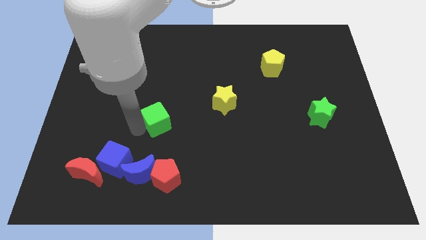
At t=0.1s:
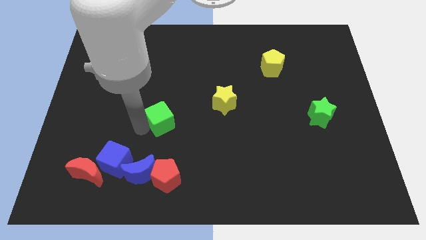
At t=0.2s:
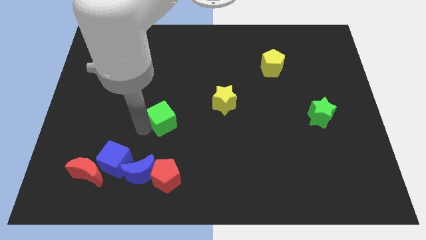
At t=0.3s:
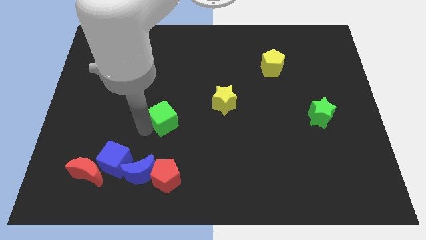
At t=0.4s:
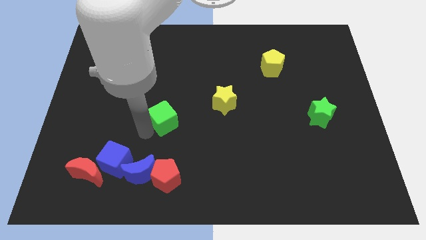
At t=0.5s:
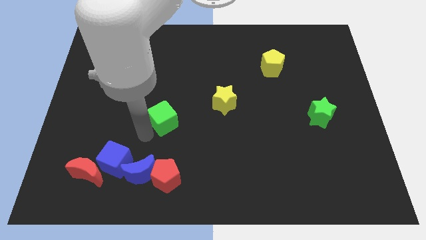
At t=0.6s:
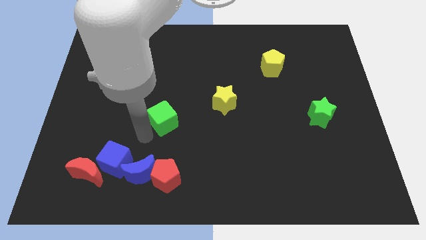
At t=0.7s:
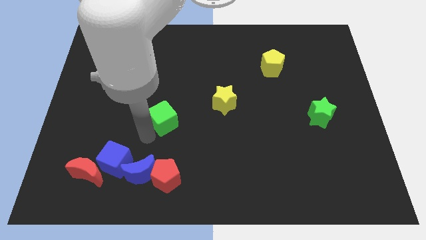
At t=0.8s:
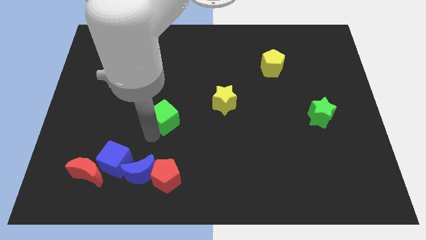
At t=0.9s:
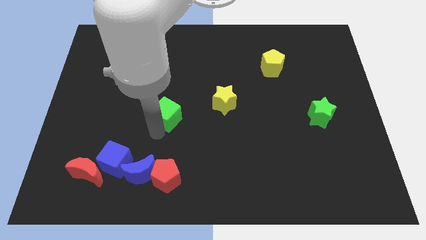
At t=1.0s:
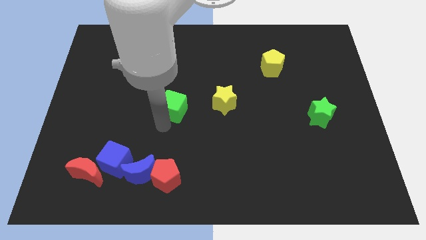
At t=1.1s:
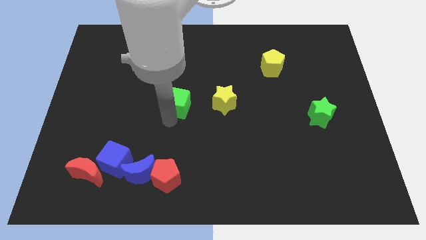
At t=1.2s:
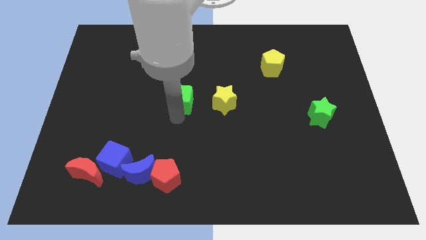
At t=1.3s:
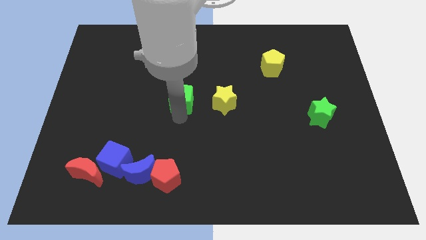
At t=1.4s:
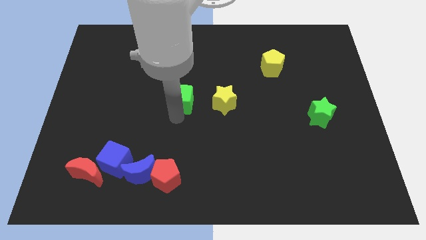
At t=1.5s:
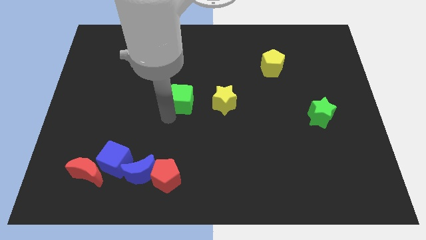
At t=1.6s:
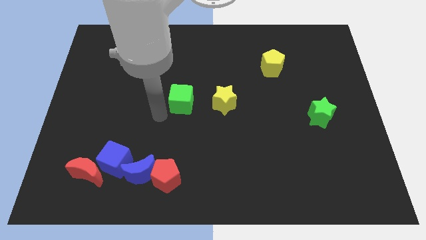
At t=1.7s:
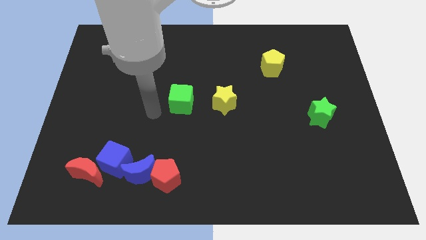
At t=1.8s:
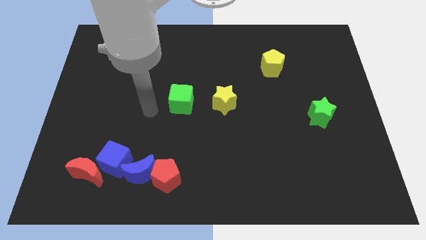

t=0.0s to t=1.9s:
move the green cube horizontally to the yellow star

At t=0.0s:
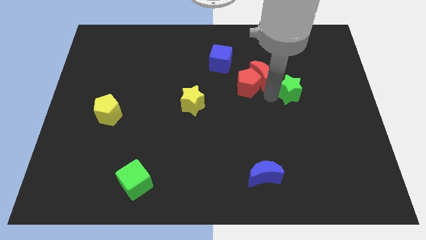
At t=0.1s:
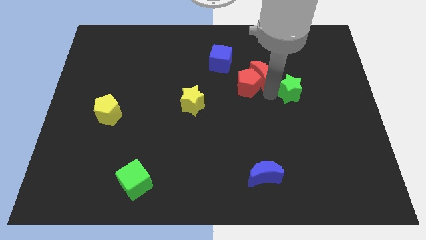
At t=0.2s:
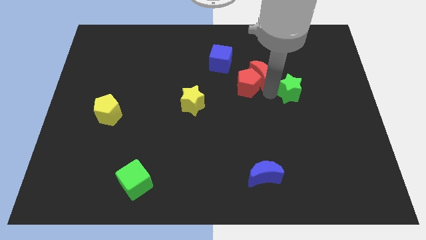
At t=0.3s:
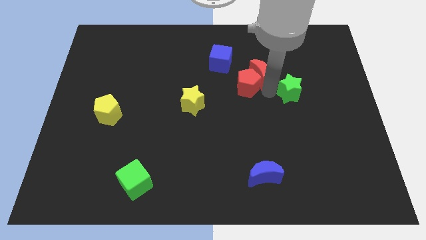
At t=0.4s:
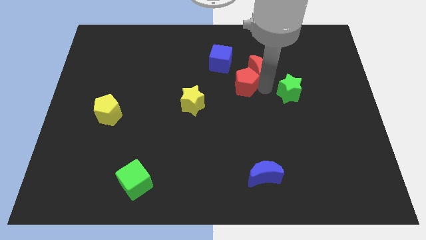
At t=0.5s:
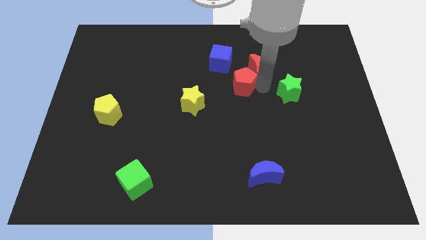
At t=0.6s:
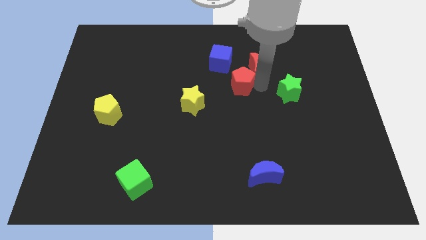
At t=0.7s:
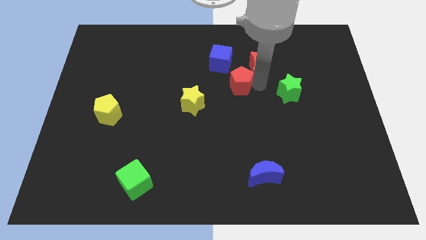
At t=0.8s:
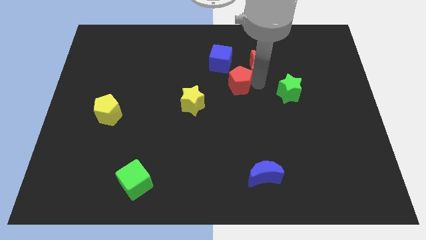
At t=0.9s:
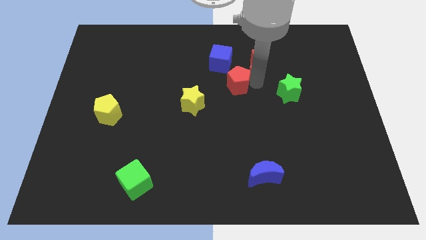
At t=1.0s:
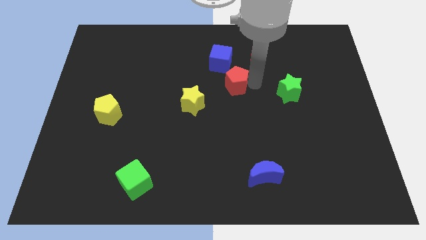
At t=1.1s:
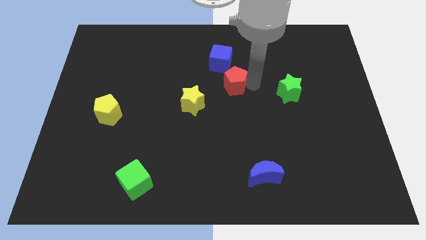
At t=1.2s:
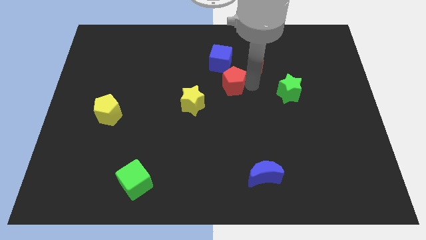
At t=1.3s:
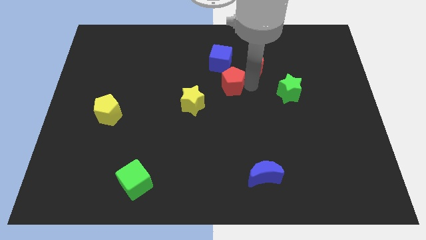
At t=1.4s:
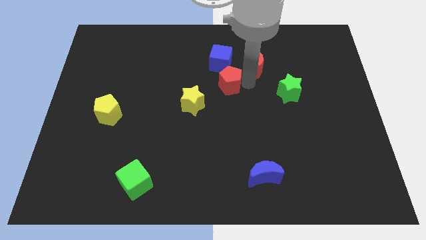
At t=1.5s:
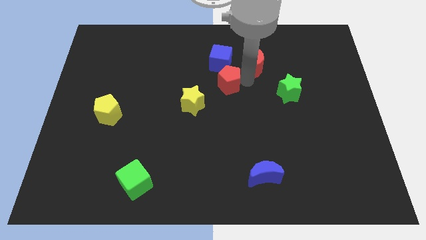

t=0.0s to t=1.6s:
separate the group of red blocks from each other

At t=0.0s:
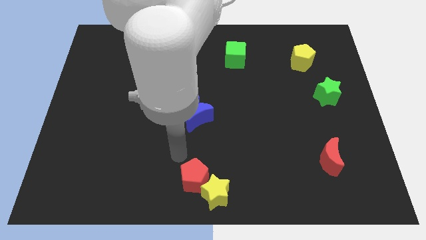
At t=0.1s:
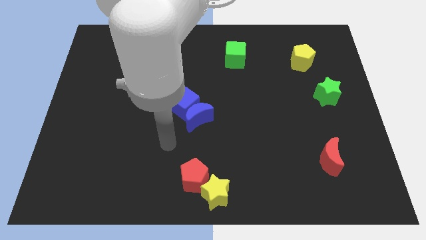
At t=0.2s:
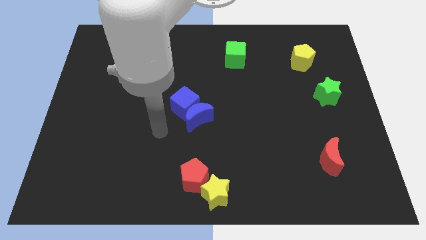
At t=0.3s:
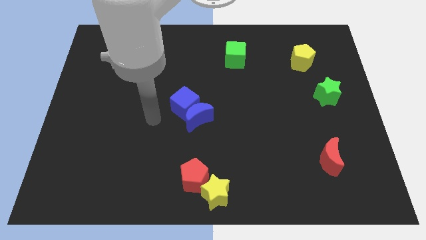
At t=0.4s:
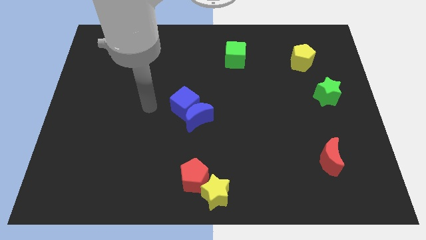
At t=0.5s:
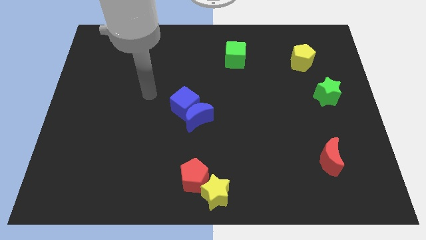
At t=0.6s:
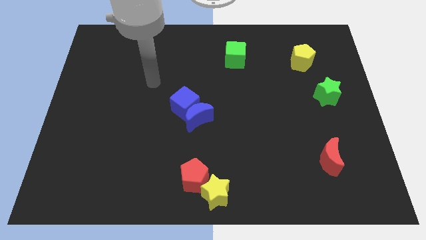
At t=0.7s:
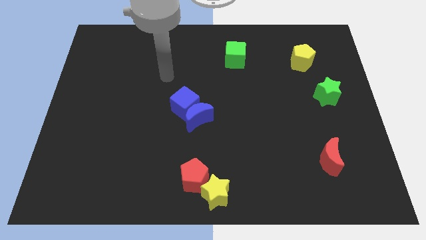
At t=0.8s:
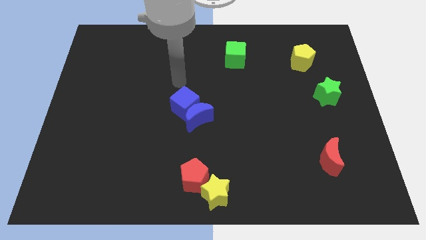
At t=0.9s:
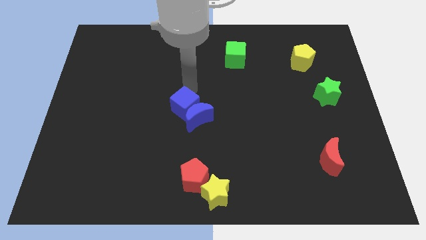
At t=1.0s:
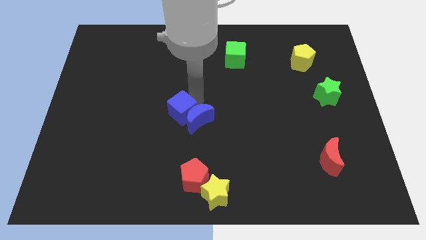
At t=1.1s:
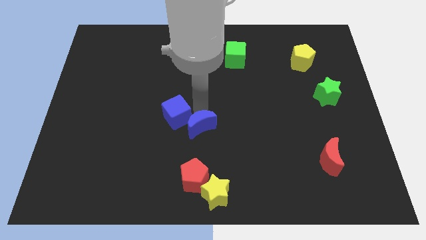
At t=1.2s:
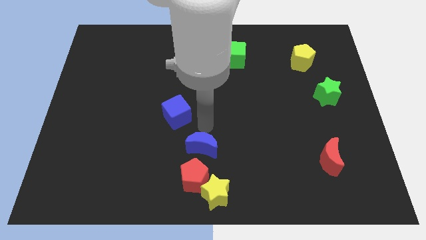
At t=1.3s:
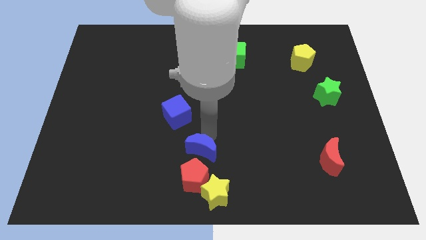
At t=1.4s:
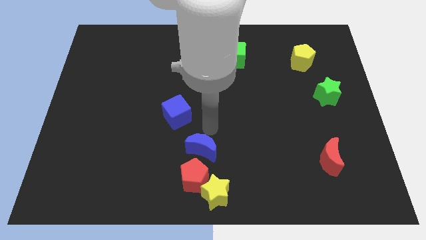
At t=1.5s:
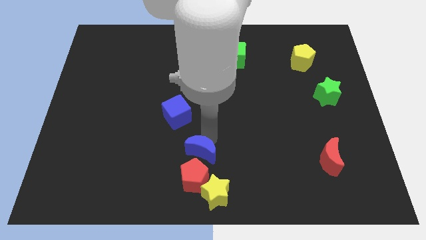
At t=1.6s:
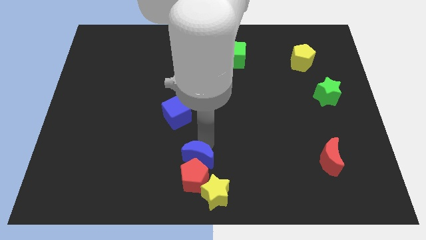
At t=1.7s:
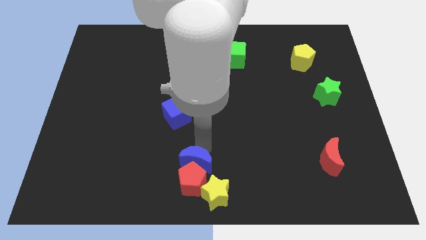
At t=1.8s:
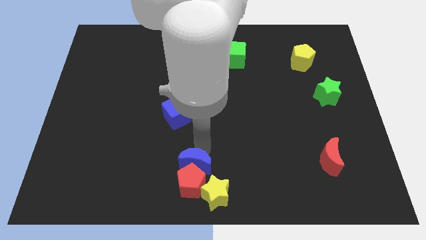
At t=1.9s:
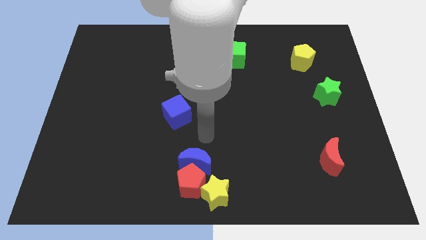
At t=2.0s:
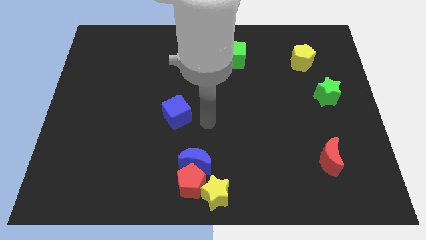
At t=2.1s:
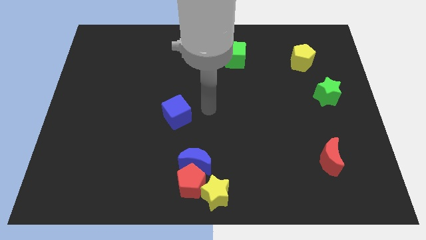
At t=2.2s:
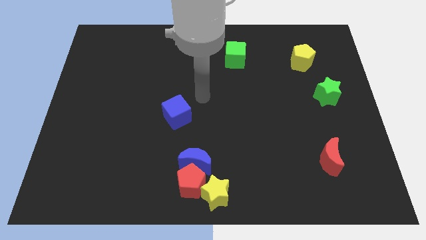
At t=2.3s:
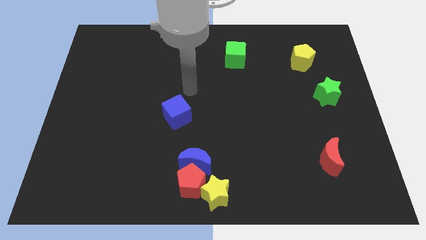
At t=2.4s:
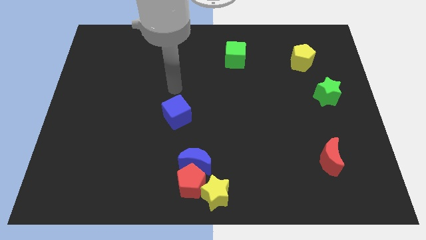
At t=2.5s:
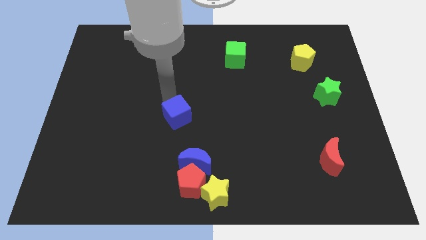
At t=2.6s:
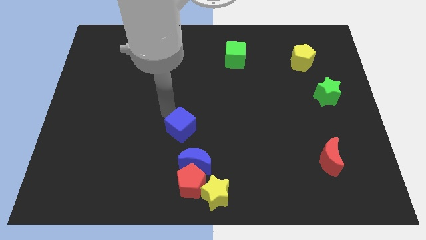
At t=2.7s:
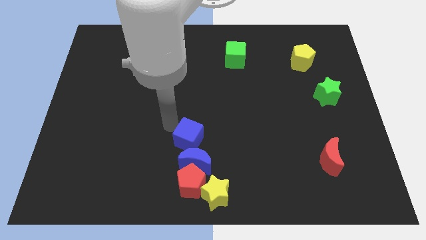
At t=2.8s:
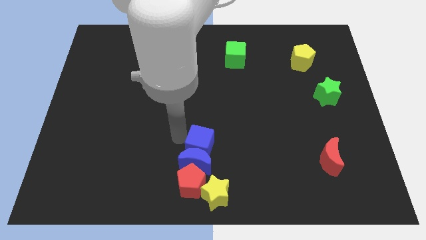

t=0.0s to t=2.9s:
place the blue crescent and blue cube into the red pentagon

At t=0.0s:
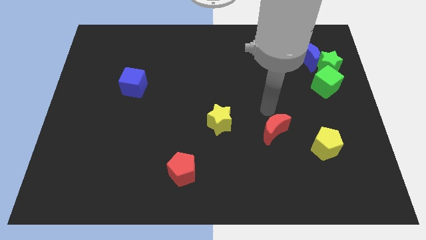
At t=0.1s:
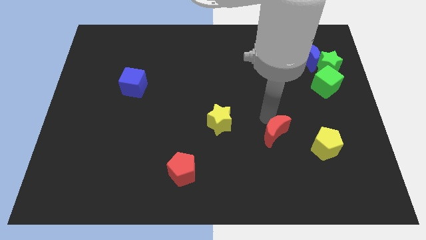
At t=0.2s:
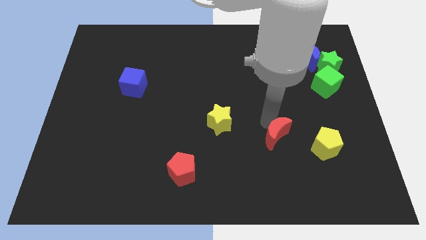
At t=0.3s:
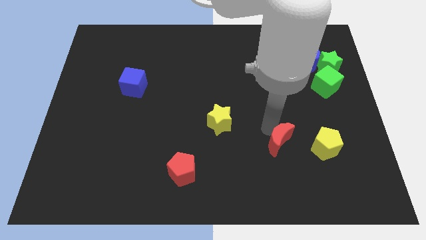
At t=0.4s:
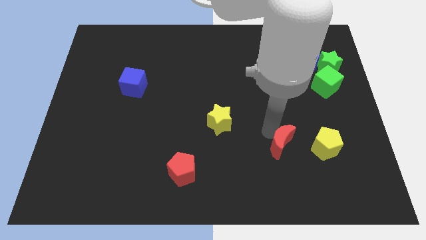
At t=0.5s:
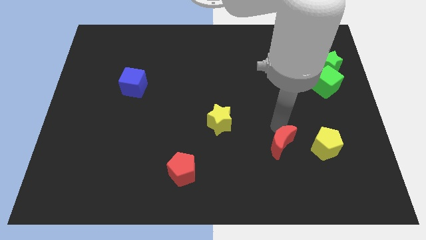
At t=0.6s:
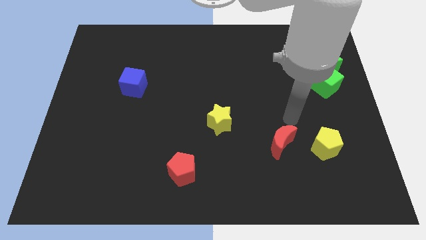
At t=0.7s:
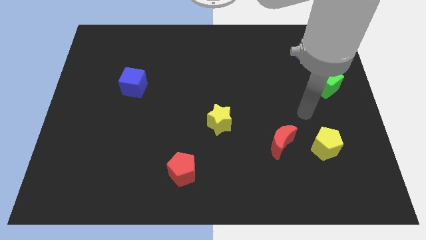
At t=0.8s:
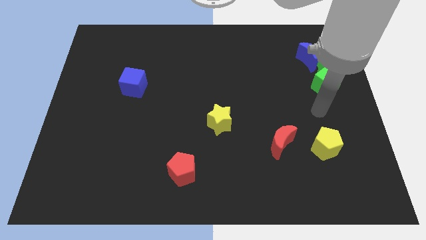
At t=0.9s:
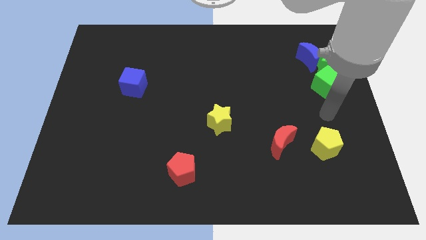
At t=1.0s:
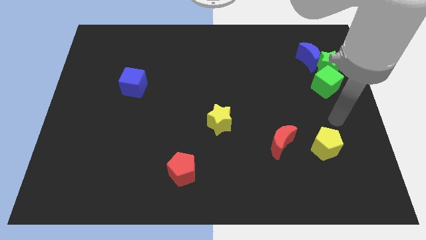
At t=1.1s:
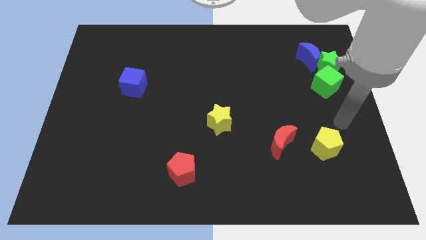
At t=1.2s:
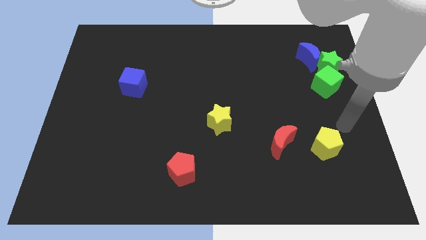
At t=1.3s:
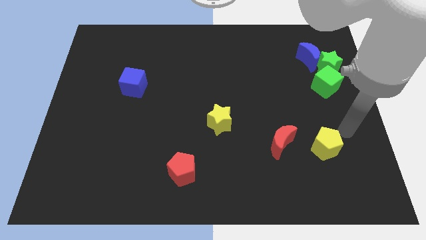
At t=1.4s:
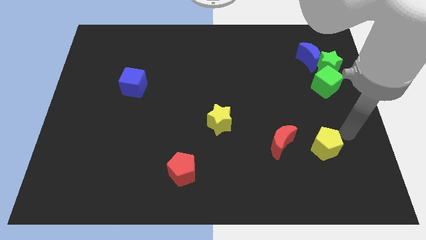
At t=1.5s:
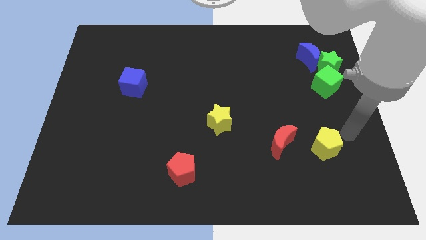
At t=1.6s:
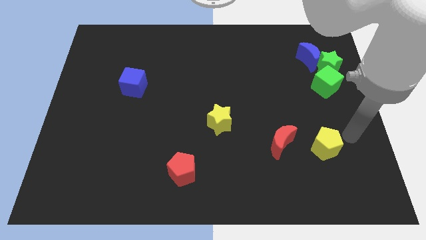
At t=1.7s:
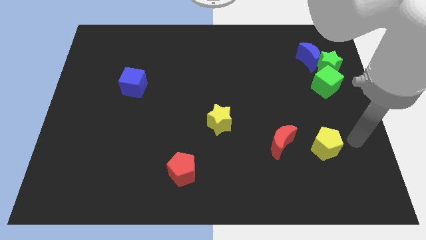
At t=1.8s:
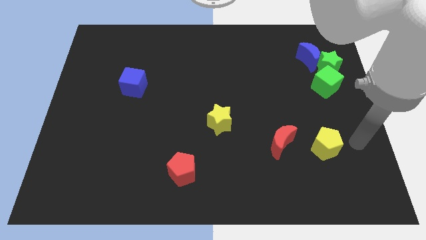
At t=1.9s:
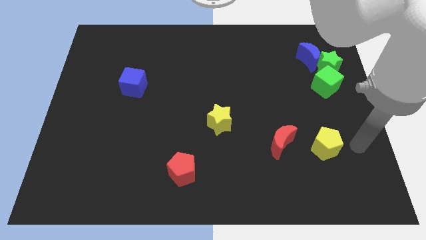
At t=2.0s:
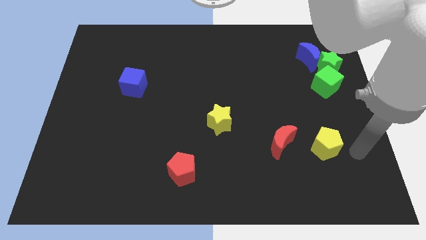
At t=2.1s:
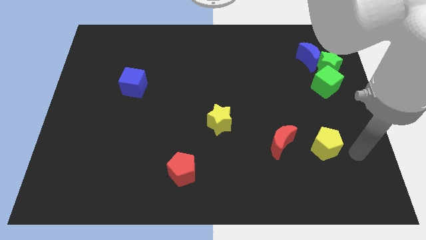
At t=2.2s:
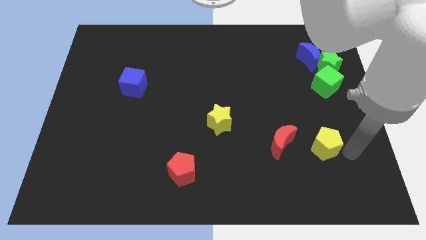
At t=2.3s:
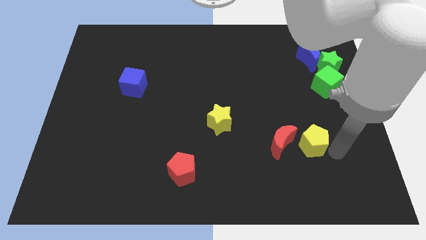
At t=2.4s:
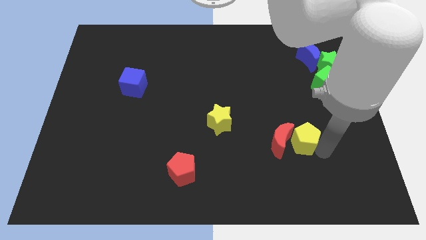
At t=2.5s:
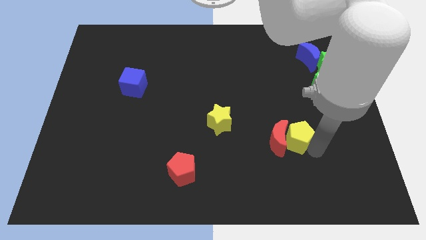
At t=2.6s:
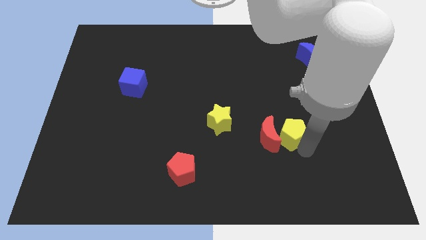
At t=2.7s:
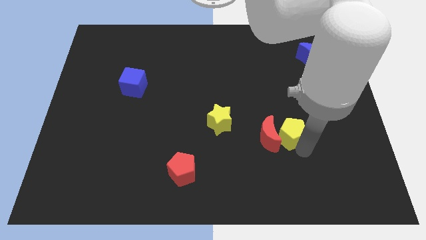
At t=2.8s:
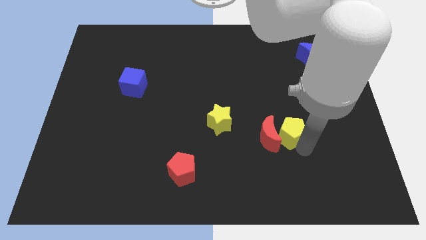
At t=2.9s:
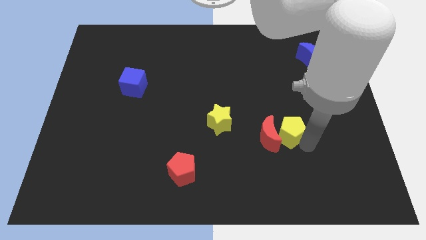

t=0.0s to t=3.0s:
push yellow pentagon into the red crescent
